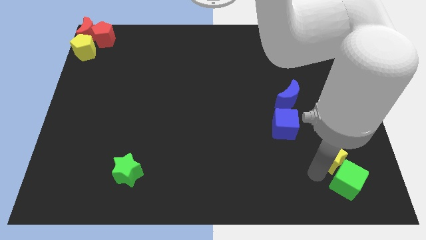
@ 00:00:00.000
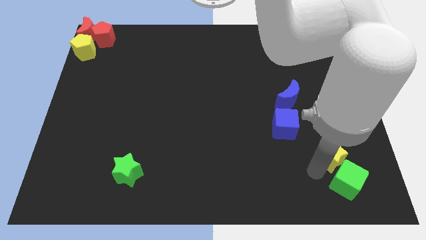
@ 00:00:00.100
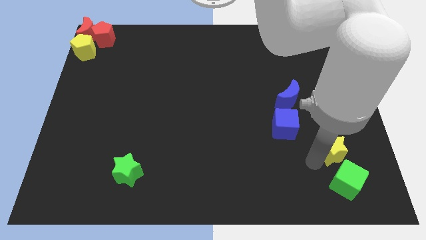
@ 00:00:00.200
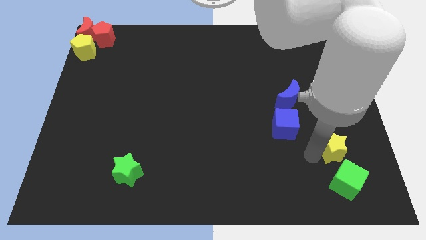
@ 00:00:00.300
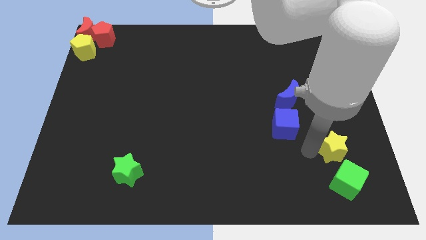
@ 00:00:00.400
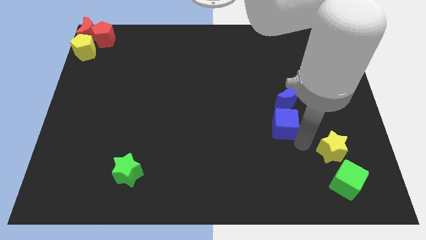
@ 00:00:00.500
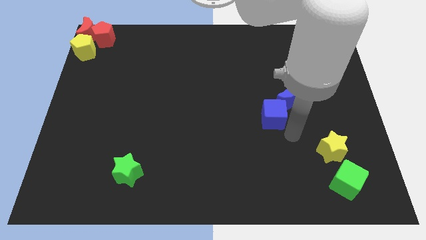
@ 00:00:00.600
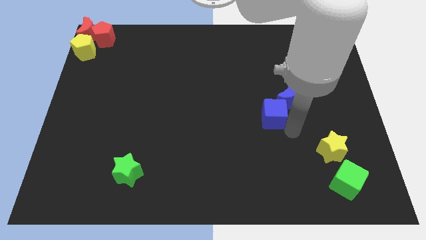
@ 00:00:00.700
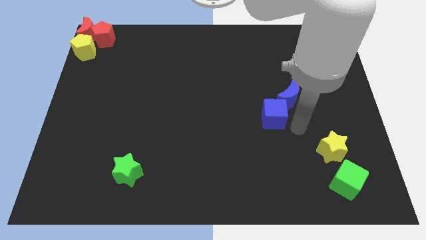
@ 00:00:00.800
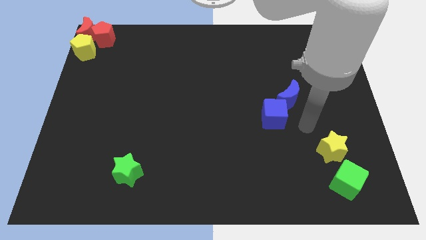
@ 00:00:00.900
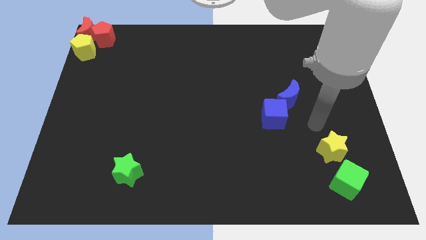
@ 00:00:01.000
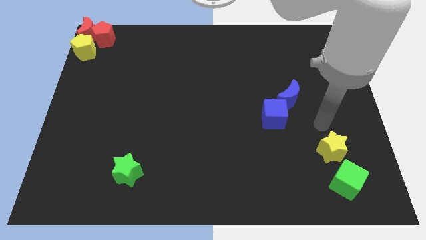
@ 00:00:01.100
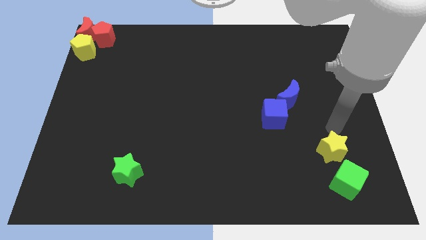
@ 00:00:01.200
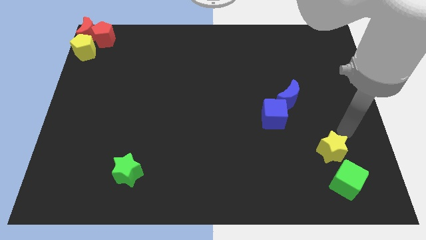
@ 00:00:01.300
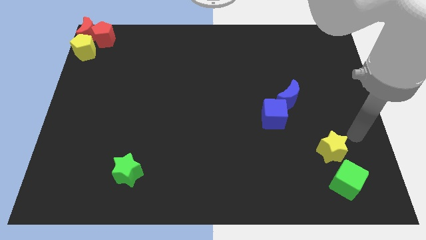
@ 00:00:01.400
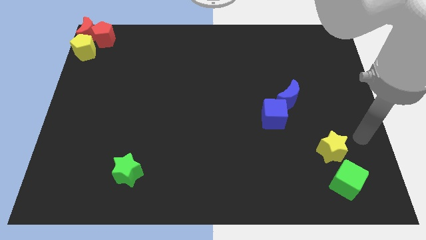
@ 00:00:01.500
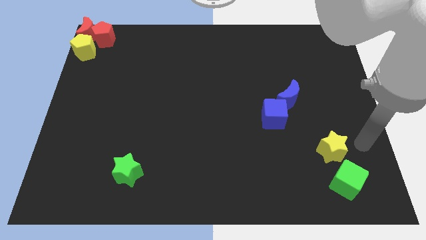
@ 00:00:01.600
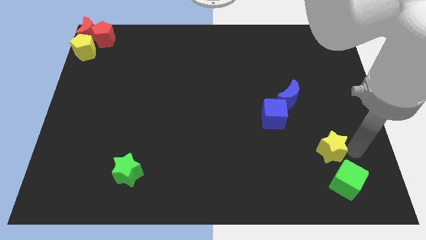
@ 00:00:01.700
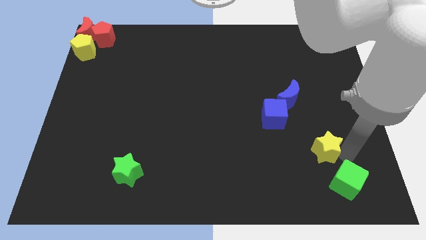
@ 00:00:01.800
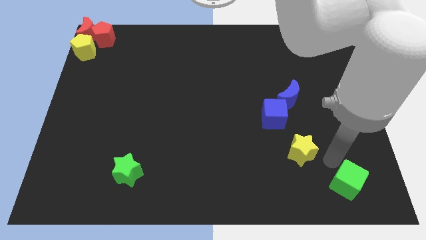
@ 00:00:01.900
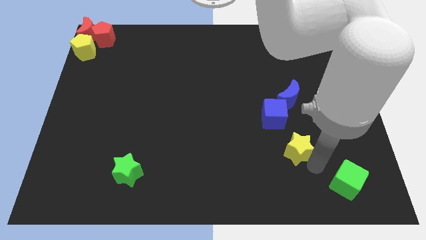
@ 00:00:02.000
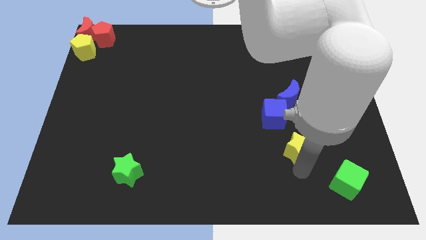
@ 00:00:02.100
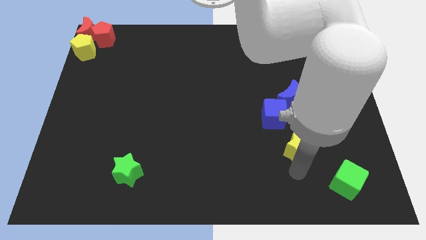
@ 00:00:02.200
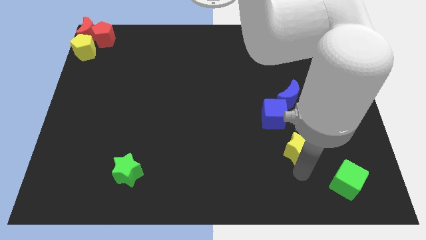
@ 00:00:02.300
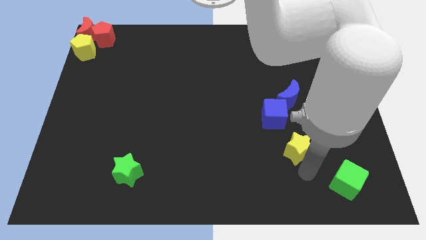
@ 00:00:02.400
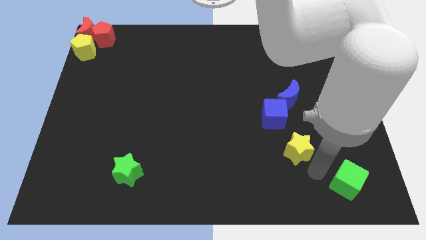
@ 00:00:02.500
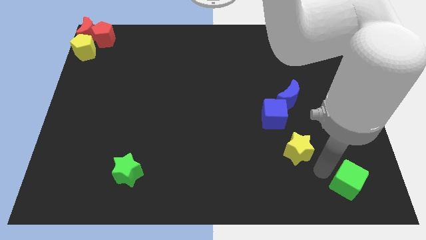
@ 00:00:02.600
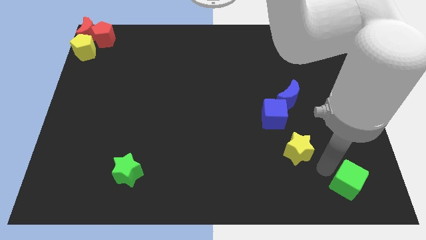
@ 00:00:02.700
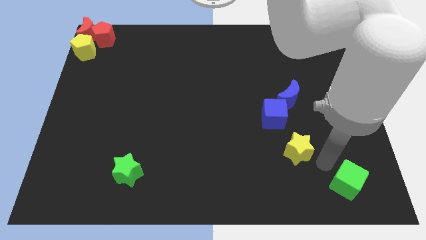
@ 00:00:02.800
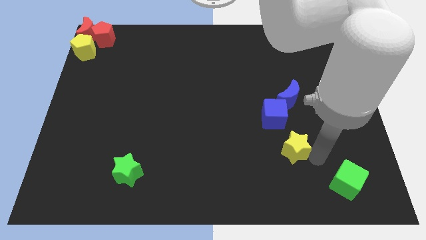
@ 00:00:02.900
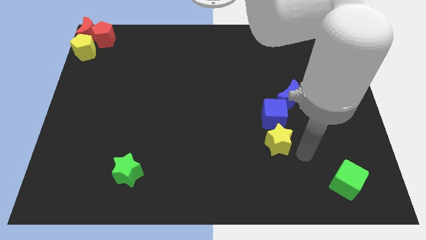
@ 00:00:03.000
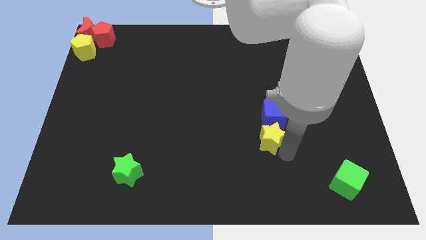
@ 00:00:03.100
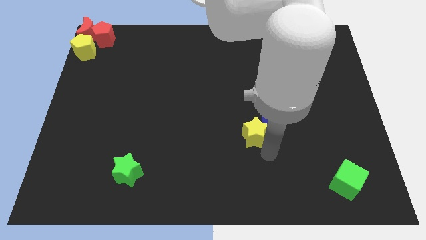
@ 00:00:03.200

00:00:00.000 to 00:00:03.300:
place the yello star diagonally top right to green star

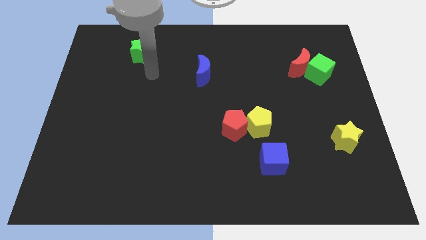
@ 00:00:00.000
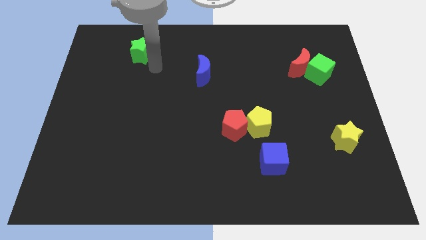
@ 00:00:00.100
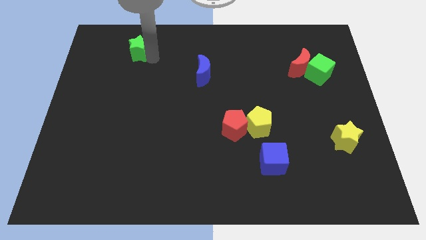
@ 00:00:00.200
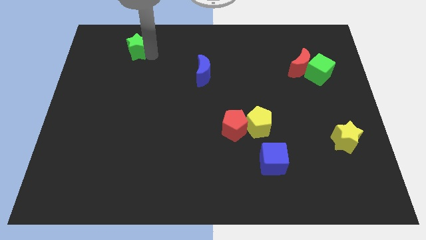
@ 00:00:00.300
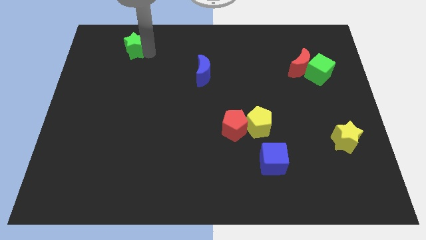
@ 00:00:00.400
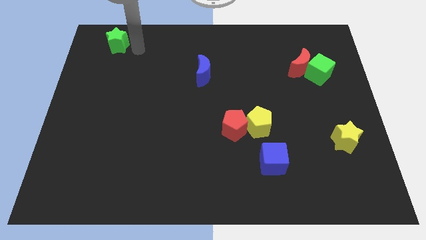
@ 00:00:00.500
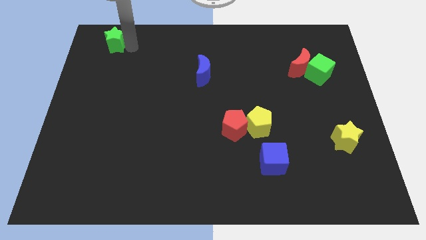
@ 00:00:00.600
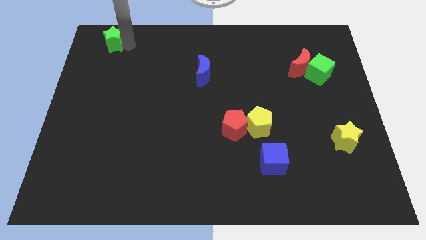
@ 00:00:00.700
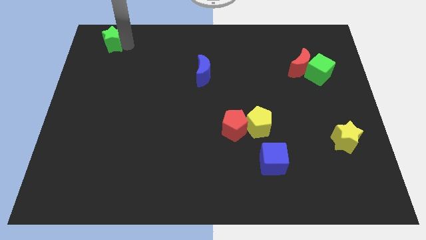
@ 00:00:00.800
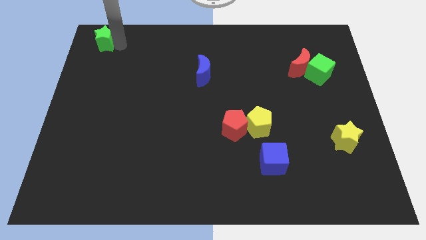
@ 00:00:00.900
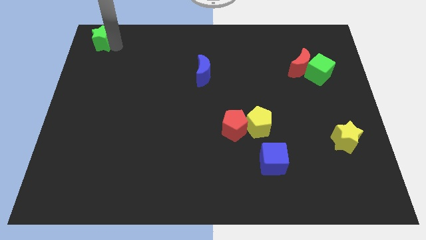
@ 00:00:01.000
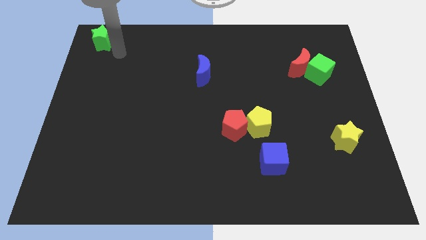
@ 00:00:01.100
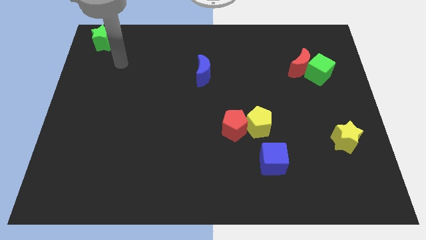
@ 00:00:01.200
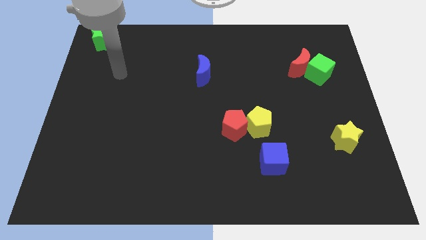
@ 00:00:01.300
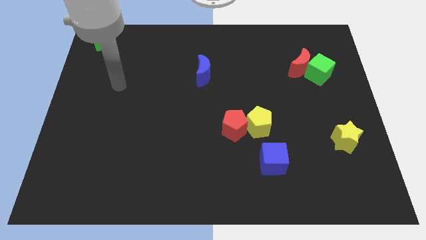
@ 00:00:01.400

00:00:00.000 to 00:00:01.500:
push the green star towards the top side of the board

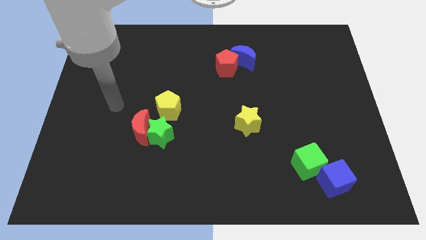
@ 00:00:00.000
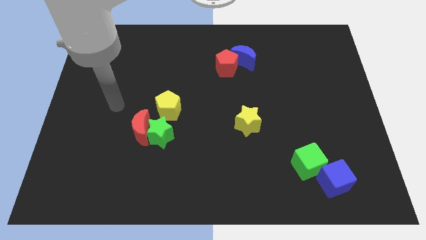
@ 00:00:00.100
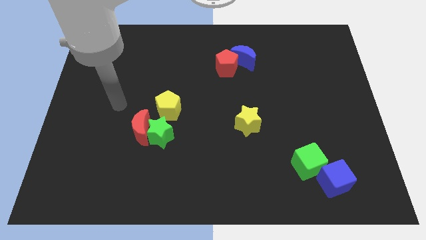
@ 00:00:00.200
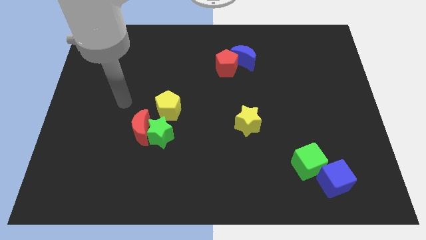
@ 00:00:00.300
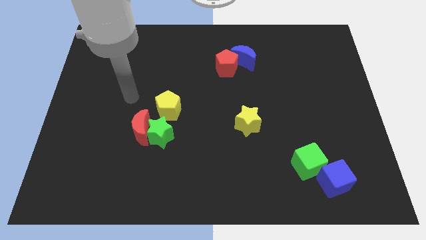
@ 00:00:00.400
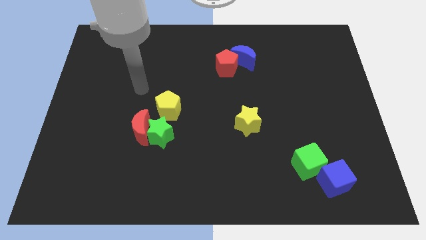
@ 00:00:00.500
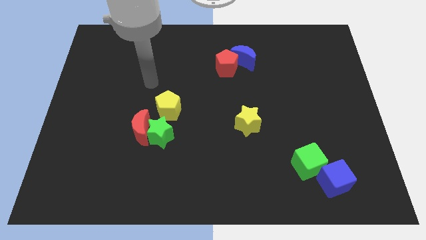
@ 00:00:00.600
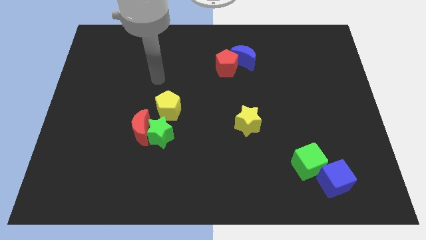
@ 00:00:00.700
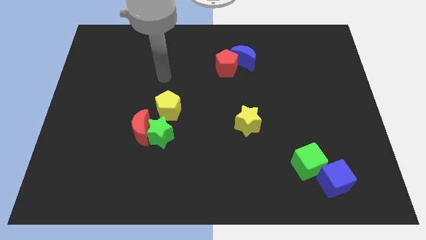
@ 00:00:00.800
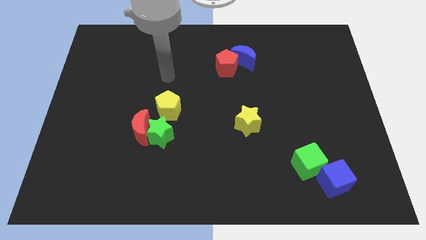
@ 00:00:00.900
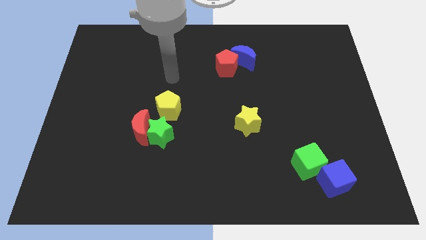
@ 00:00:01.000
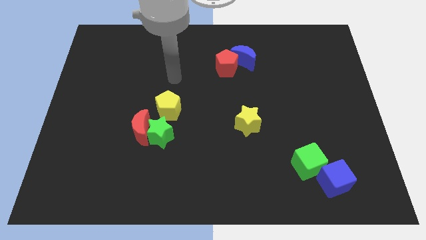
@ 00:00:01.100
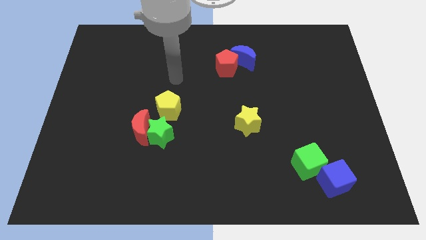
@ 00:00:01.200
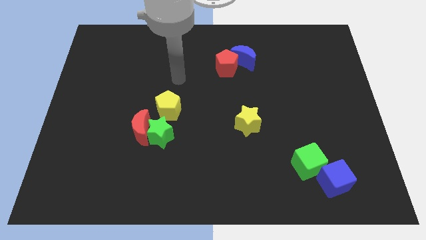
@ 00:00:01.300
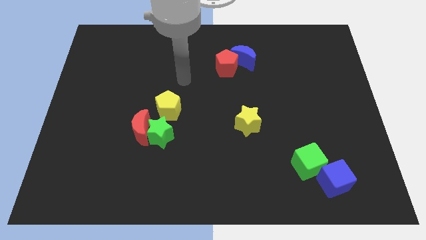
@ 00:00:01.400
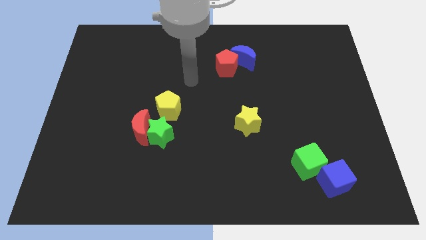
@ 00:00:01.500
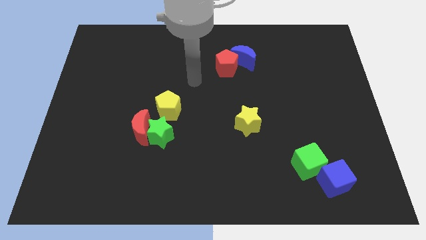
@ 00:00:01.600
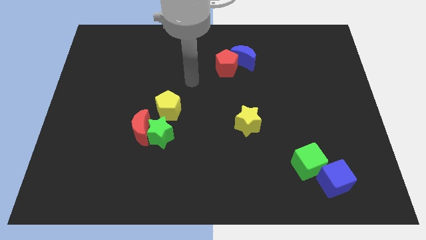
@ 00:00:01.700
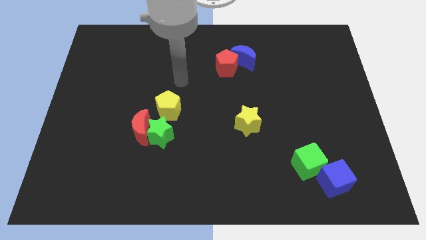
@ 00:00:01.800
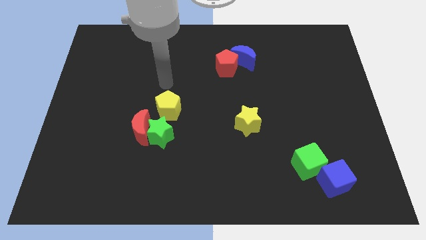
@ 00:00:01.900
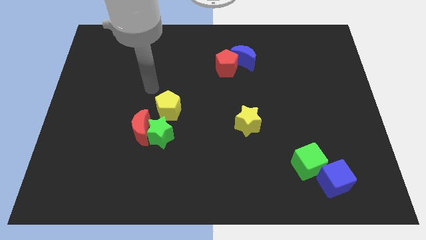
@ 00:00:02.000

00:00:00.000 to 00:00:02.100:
point your arm above yellow pentagon

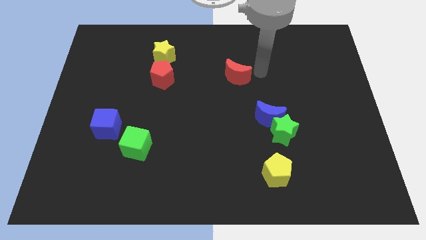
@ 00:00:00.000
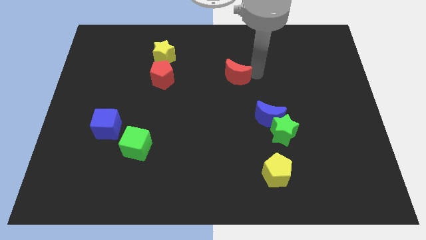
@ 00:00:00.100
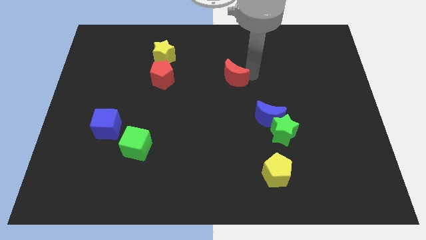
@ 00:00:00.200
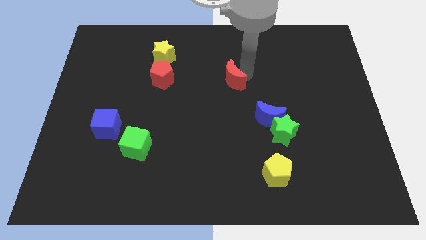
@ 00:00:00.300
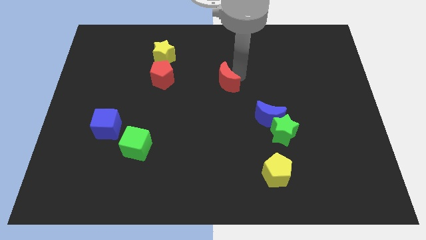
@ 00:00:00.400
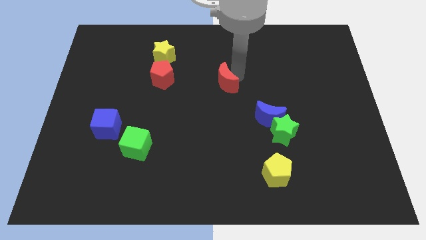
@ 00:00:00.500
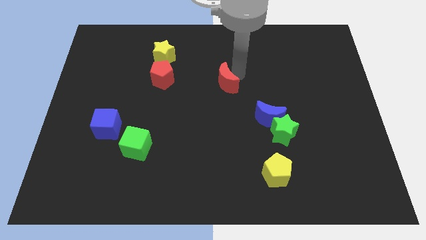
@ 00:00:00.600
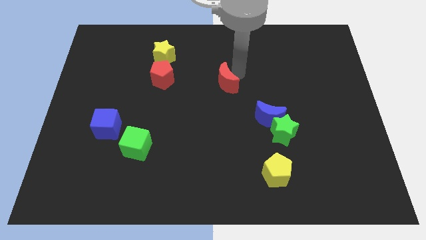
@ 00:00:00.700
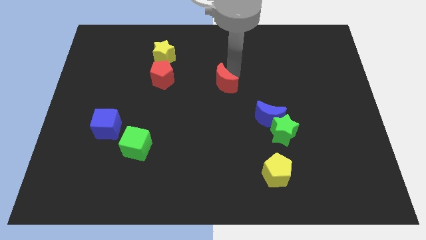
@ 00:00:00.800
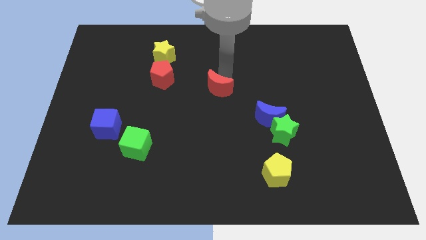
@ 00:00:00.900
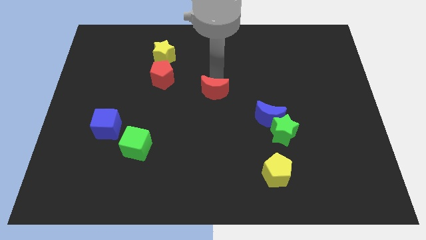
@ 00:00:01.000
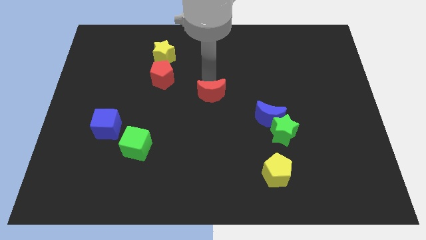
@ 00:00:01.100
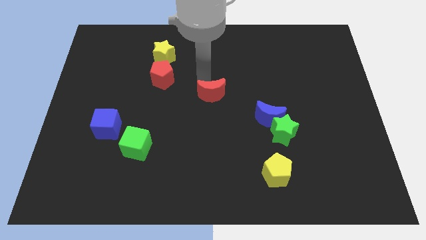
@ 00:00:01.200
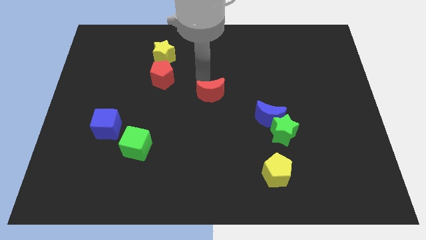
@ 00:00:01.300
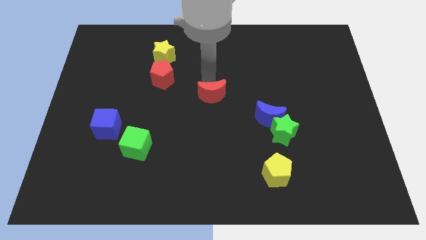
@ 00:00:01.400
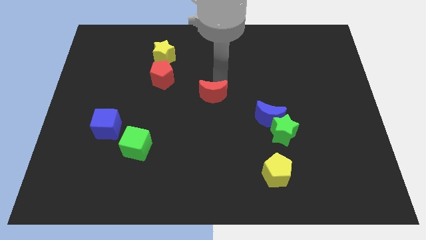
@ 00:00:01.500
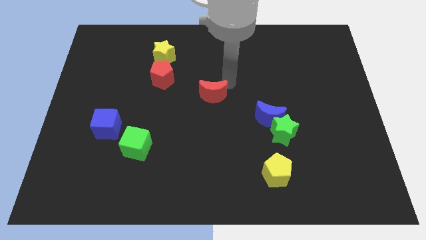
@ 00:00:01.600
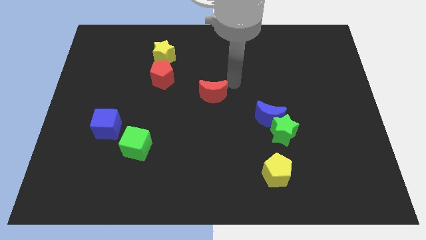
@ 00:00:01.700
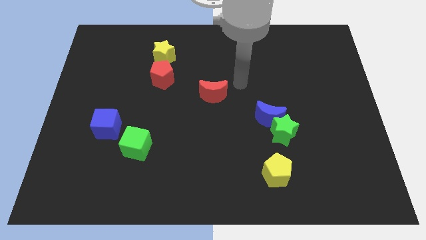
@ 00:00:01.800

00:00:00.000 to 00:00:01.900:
place the red crescent at the center of the board
